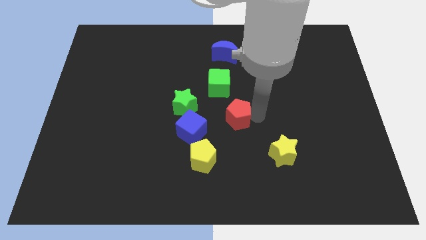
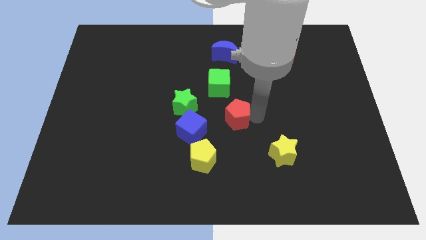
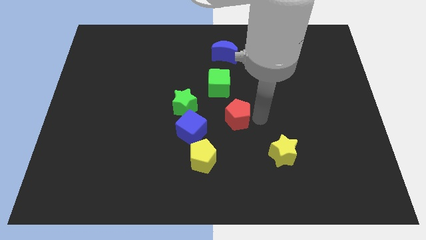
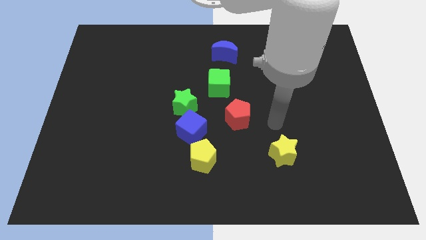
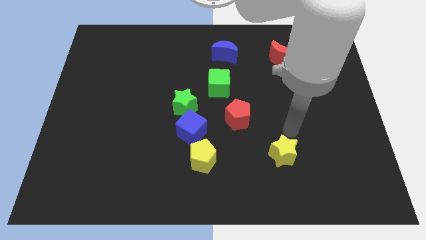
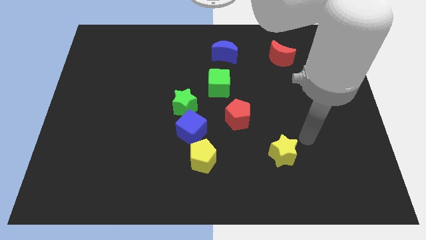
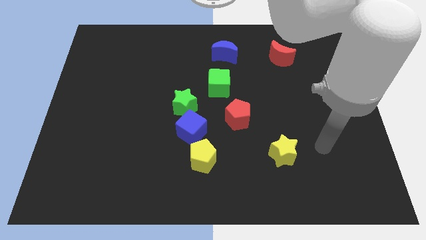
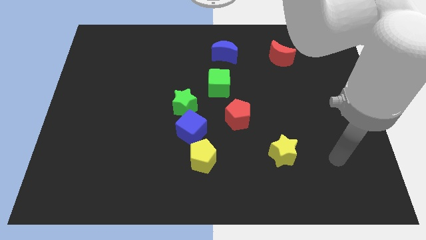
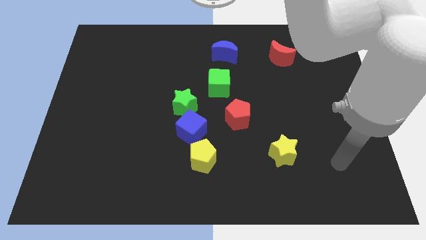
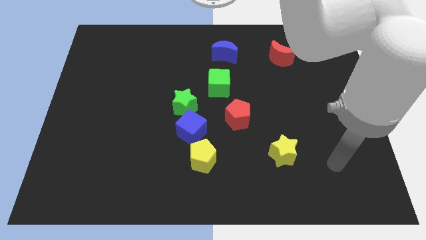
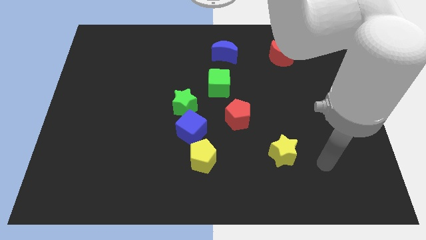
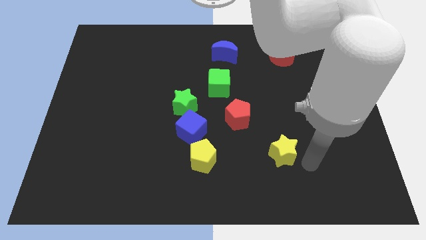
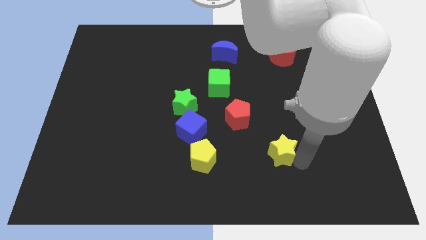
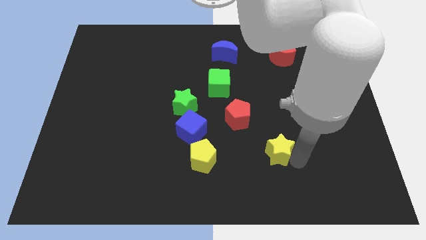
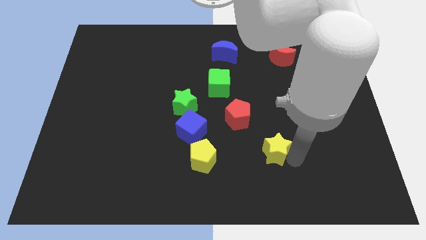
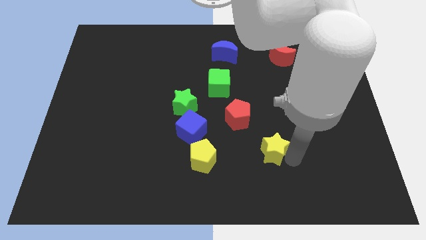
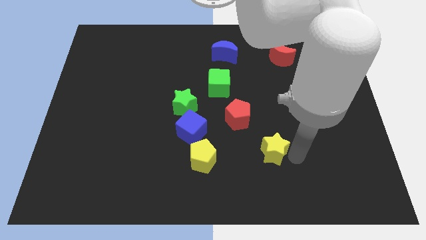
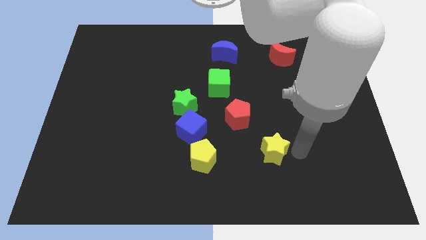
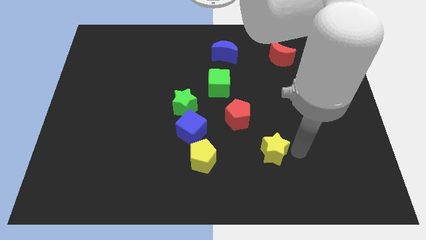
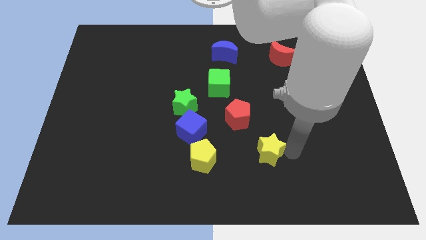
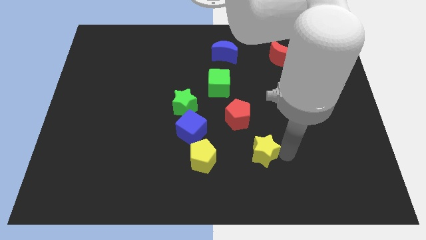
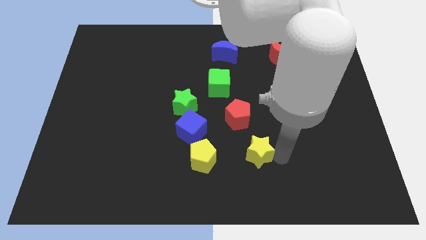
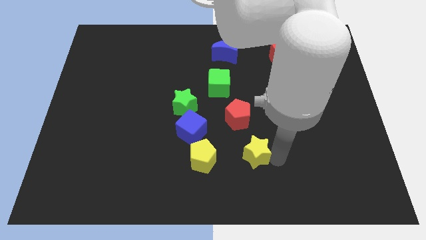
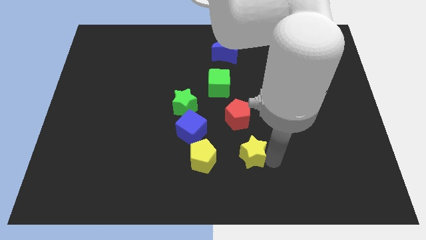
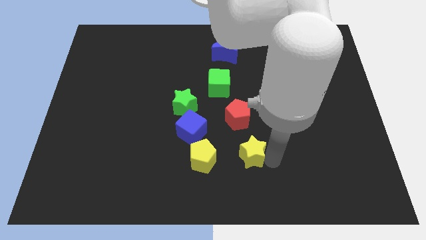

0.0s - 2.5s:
move yellow star slightly to the left

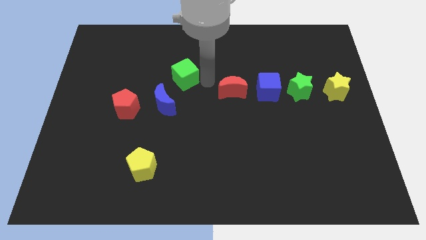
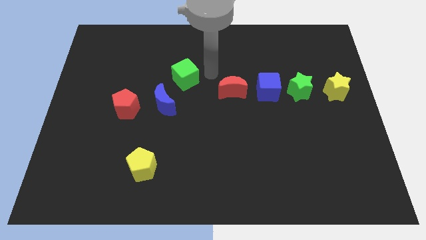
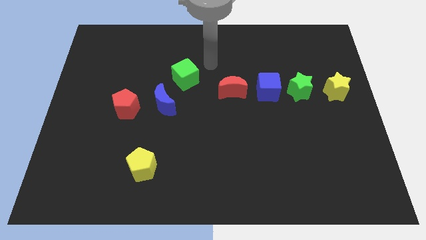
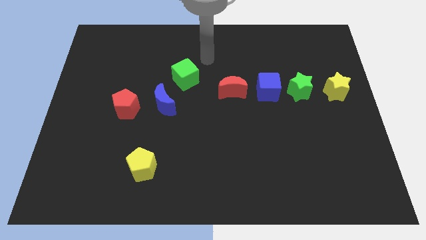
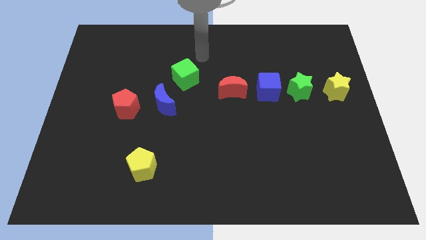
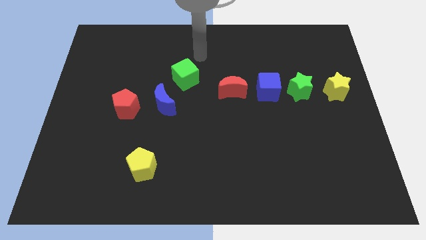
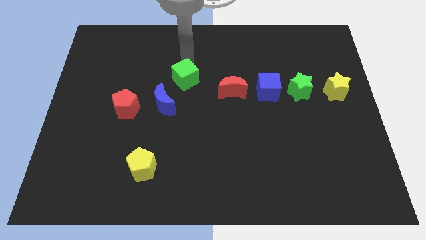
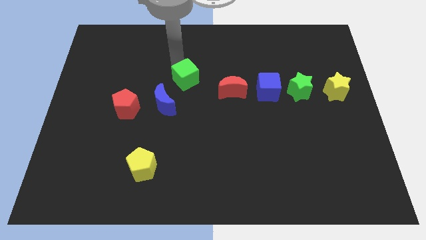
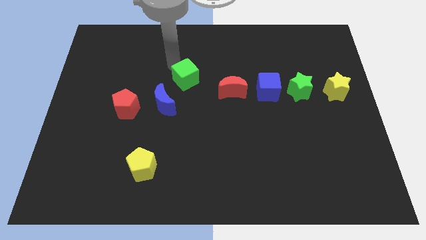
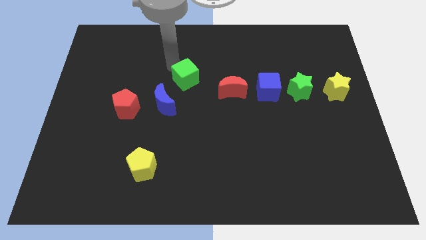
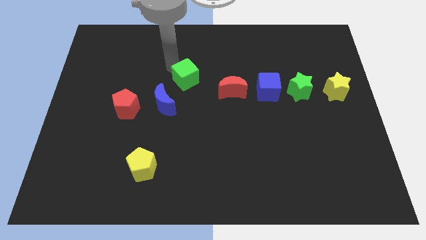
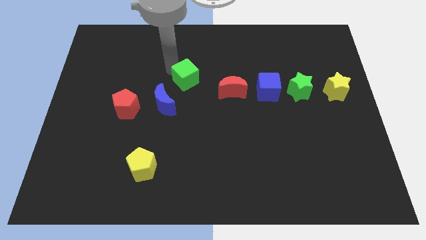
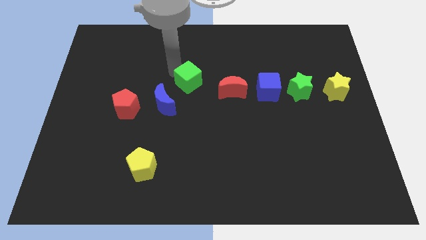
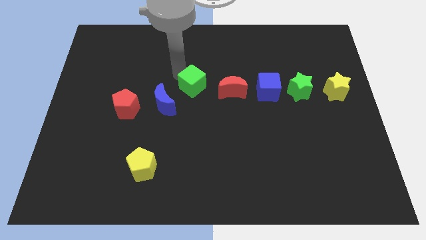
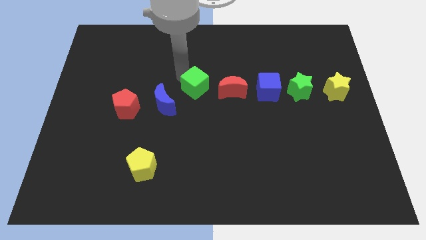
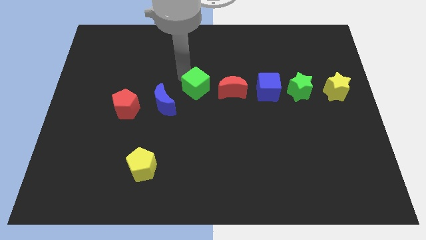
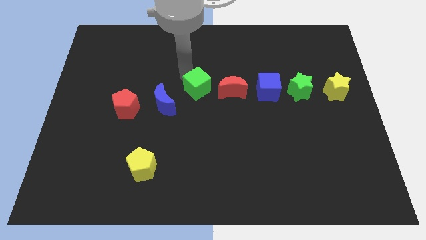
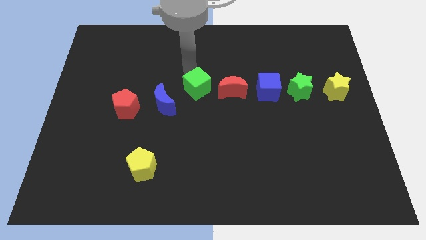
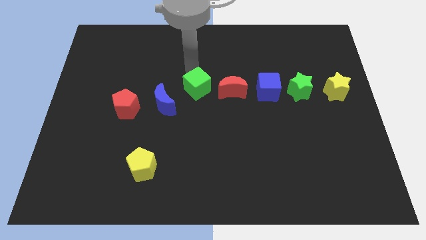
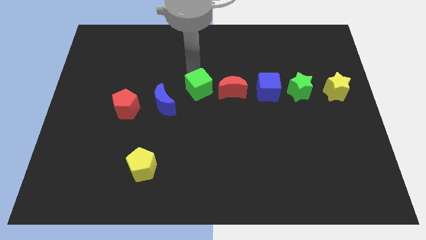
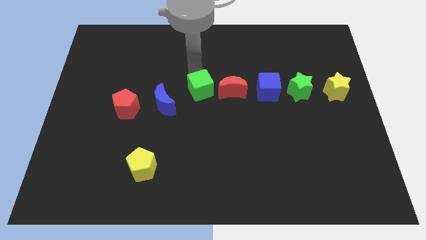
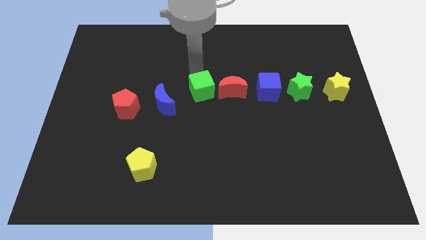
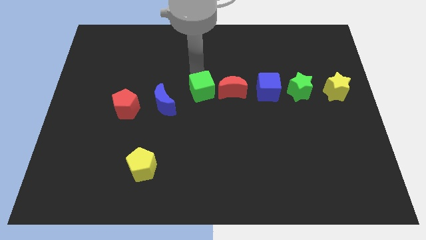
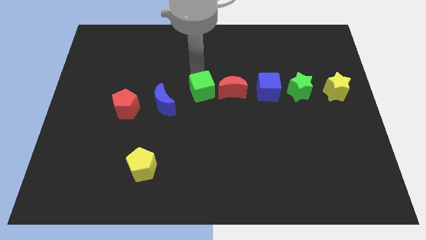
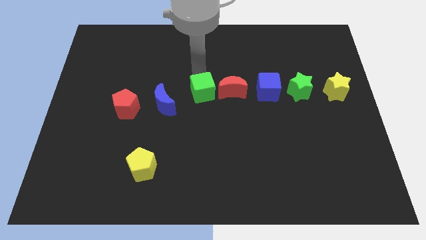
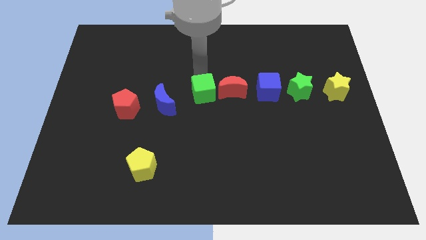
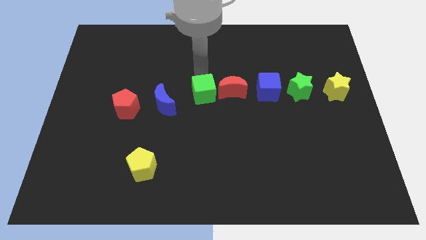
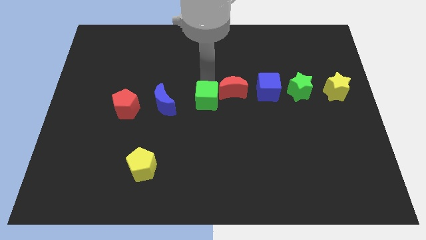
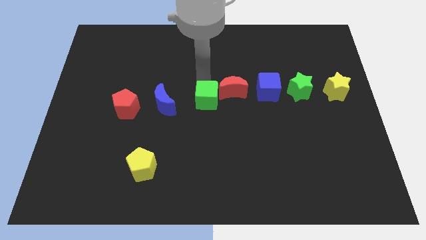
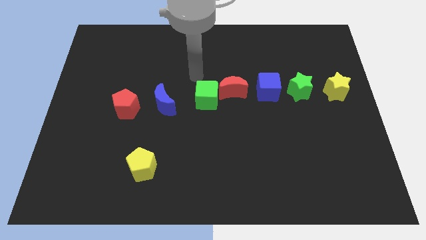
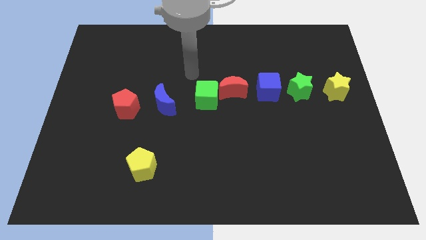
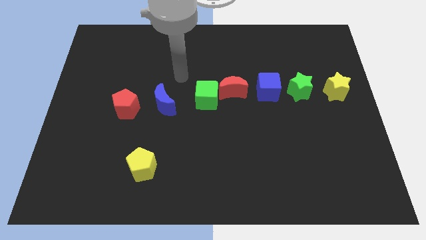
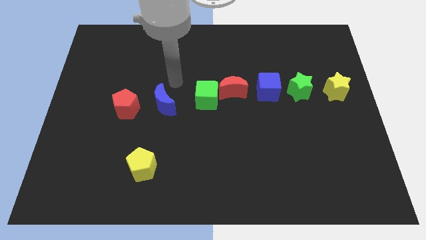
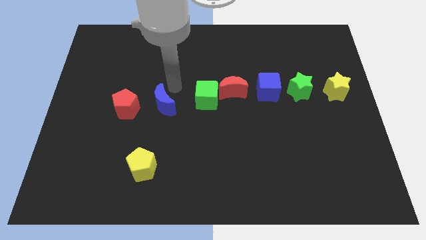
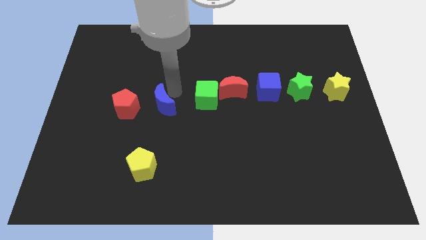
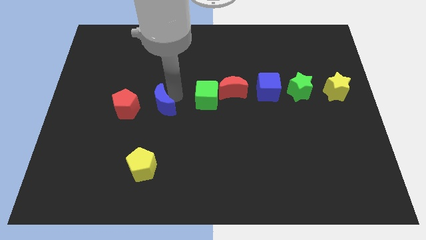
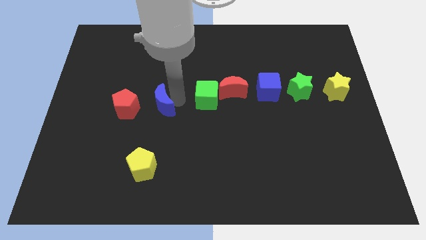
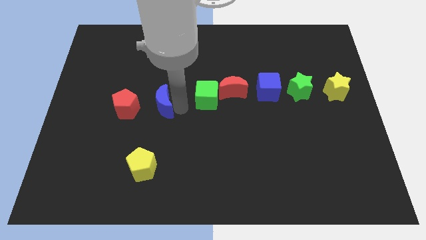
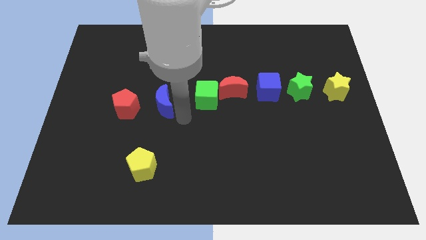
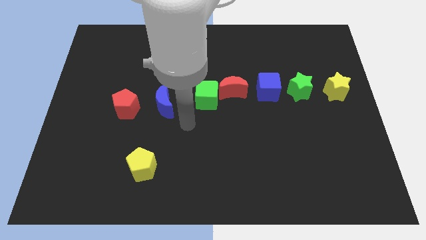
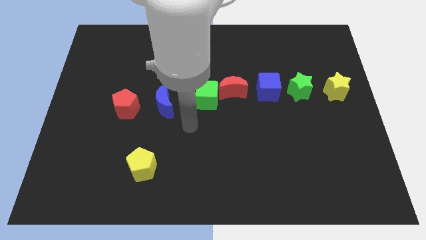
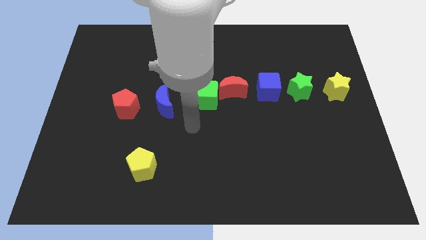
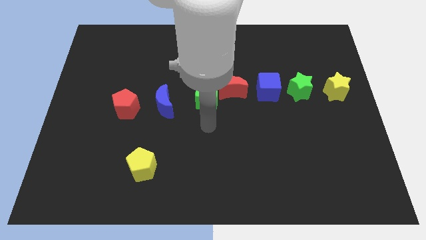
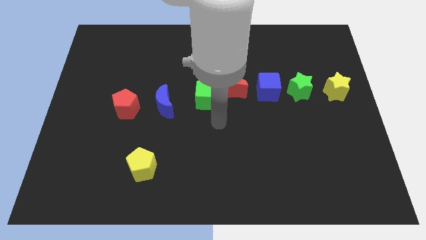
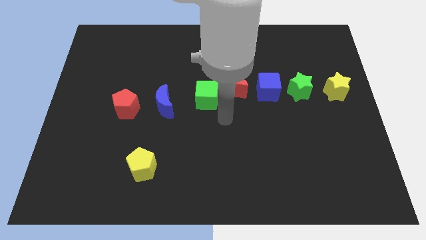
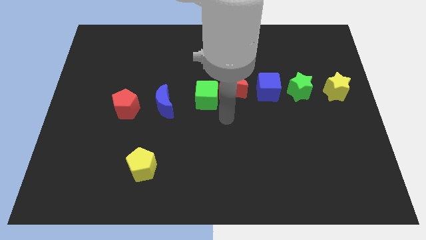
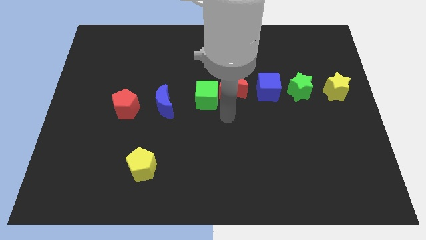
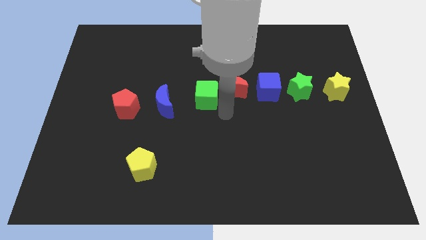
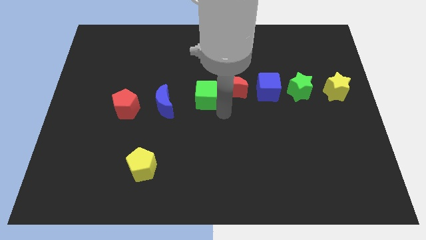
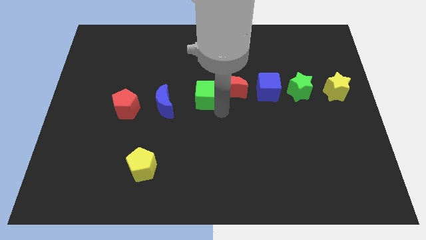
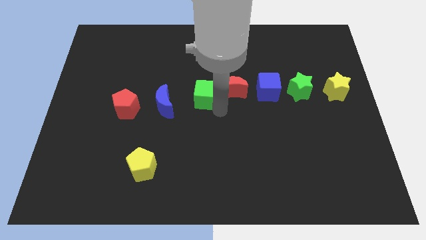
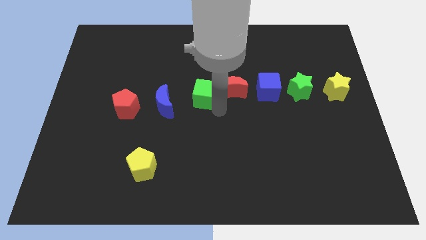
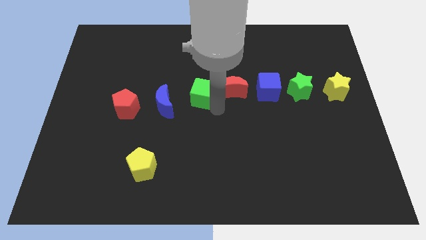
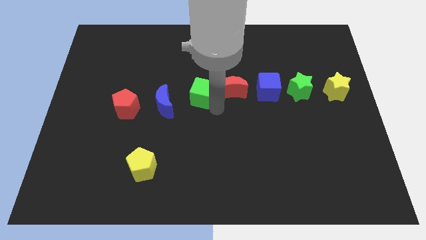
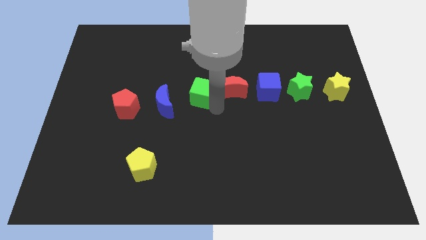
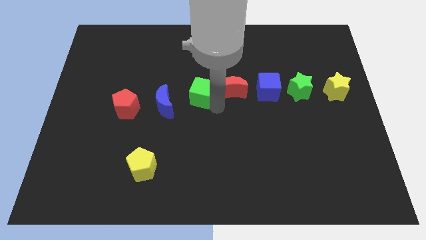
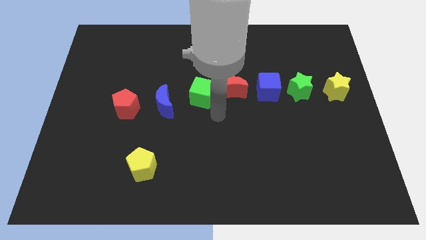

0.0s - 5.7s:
drag the green cube between the red moon and blue moon

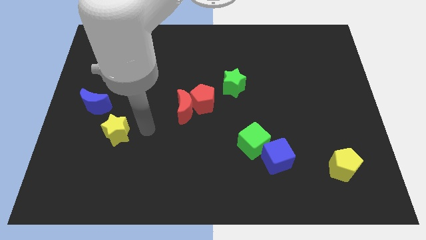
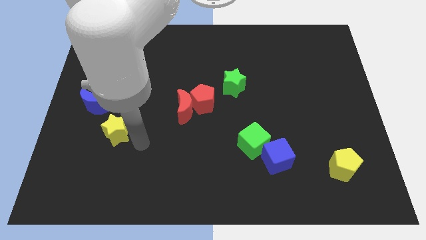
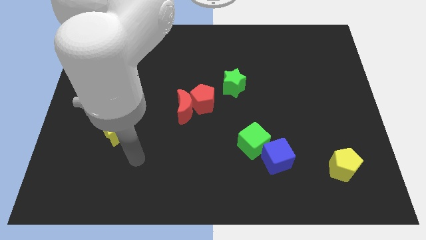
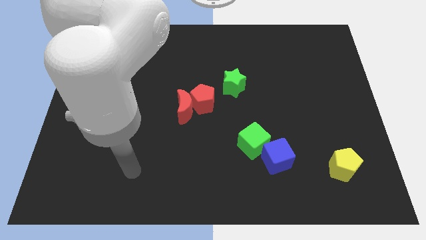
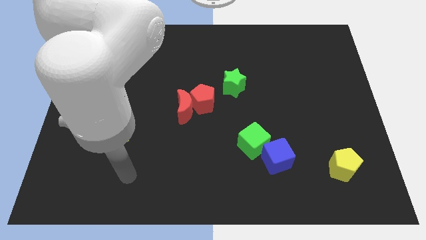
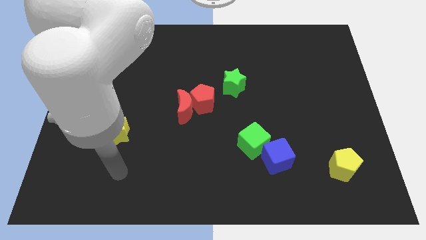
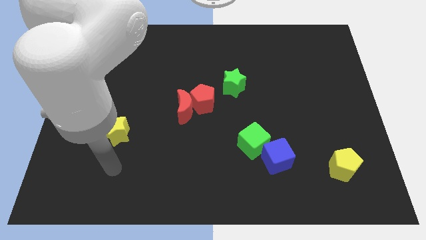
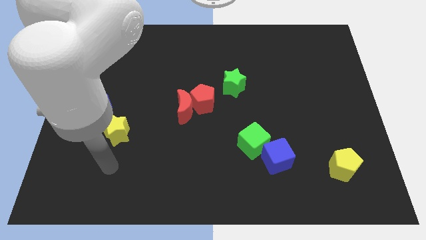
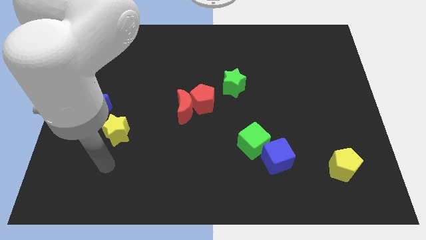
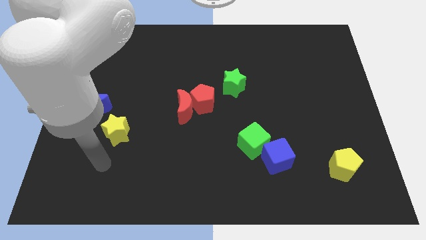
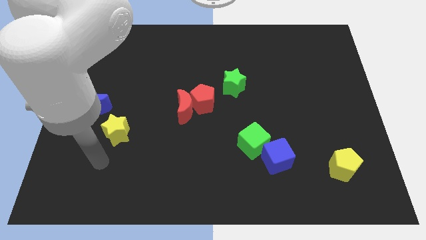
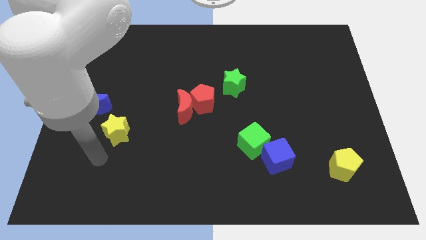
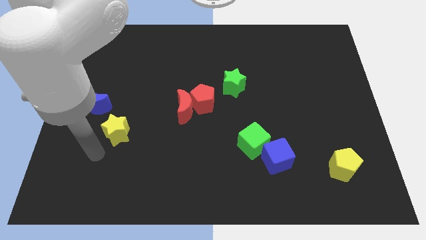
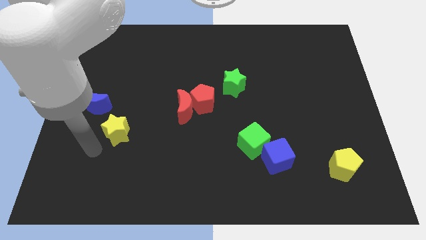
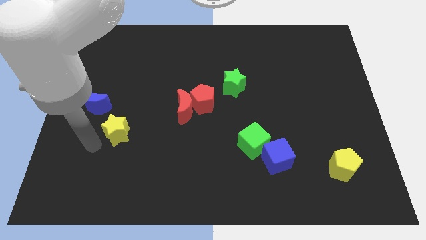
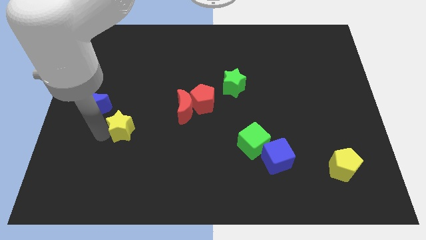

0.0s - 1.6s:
point your hand at the bottom left side of the yellow star
